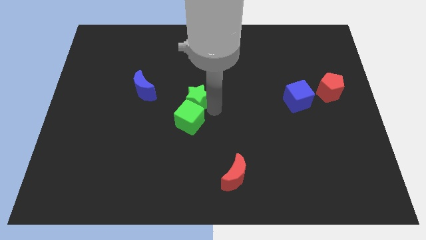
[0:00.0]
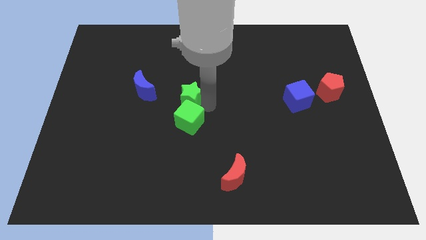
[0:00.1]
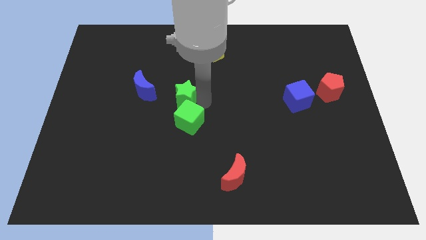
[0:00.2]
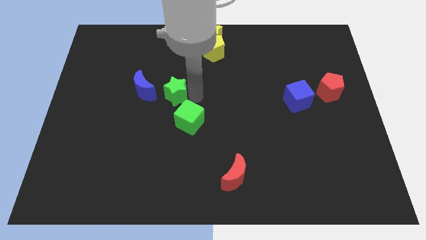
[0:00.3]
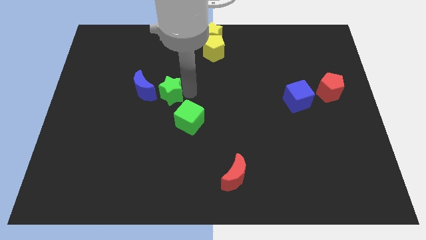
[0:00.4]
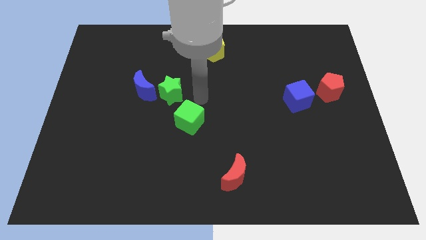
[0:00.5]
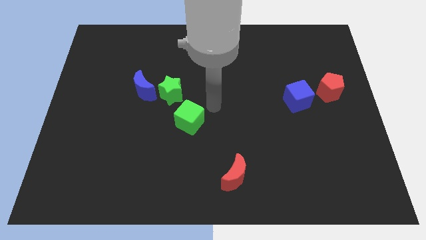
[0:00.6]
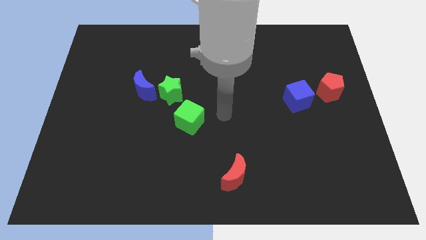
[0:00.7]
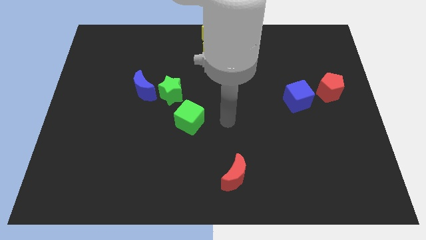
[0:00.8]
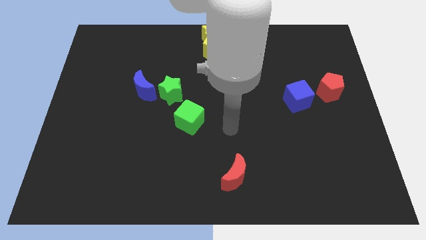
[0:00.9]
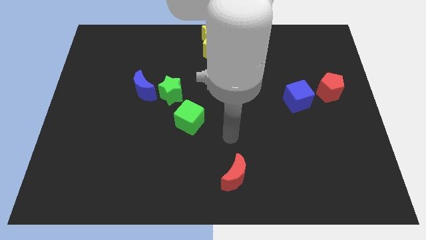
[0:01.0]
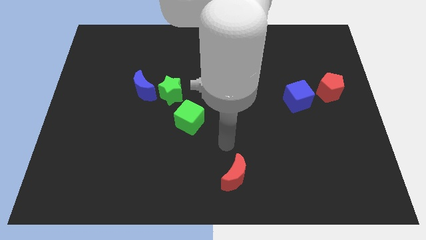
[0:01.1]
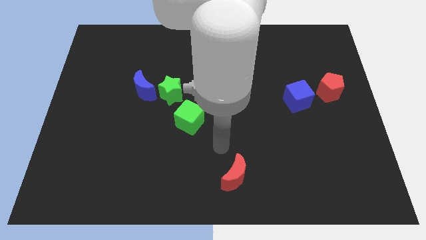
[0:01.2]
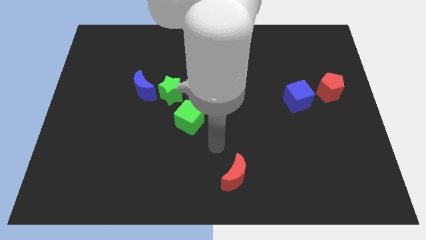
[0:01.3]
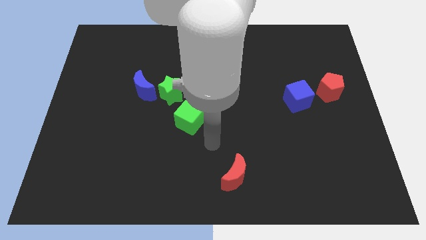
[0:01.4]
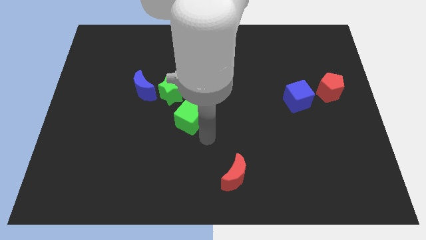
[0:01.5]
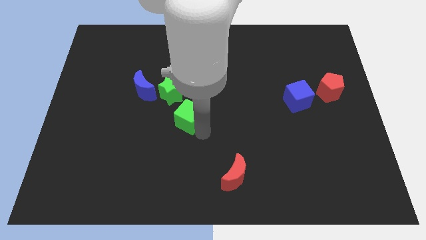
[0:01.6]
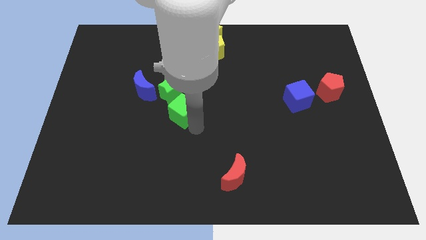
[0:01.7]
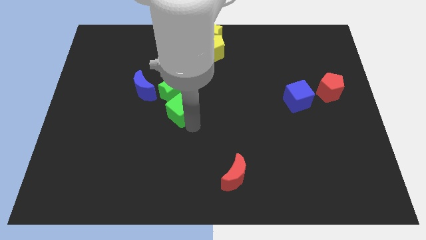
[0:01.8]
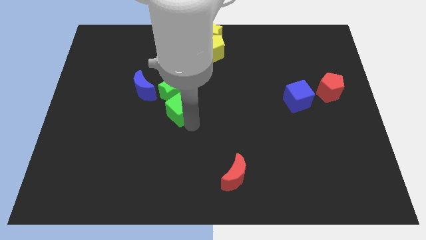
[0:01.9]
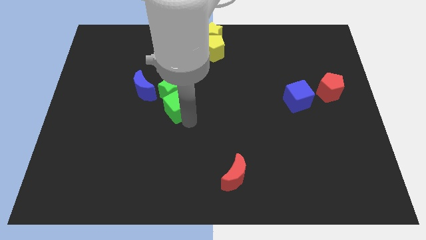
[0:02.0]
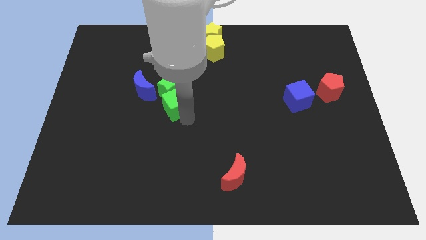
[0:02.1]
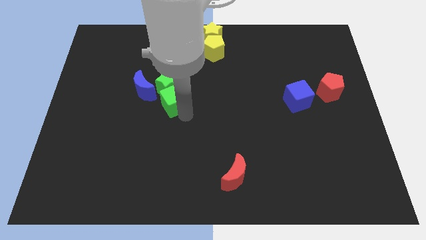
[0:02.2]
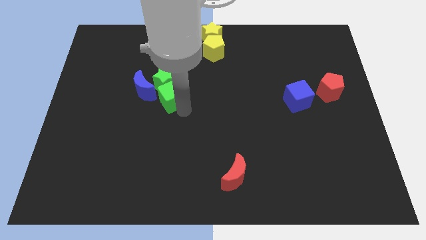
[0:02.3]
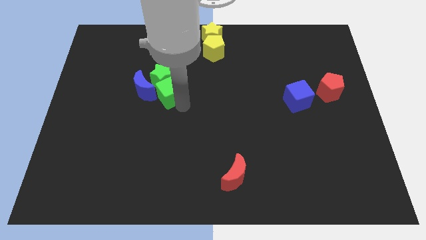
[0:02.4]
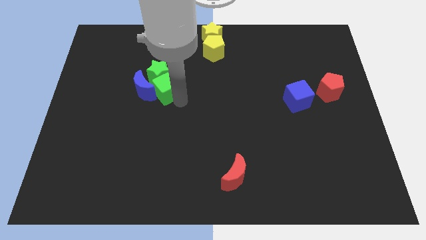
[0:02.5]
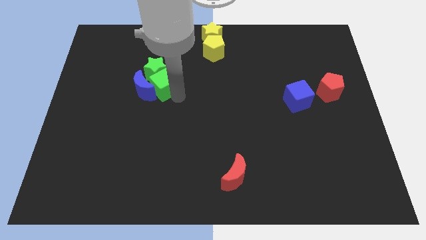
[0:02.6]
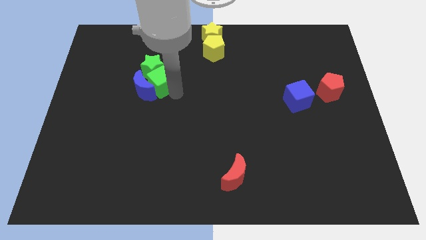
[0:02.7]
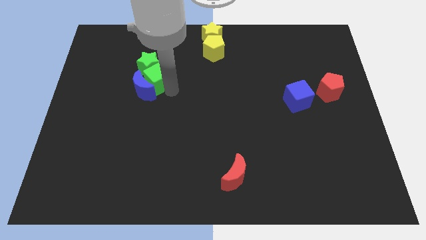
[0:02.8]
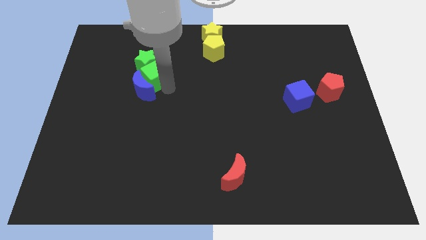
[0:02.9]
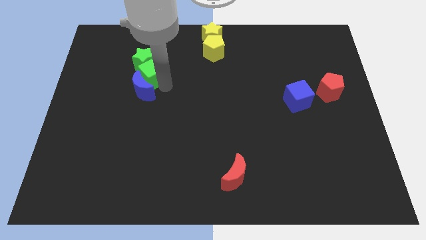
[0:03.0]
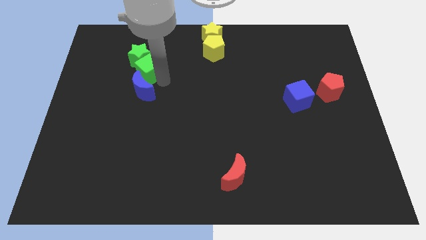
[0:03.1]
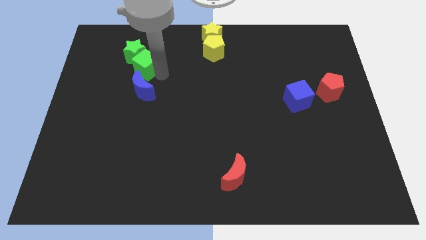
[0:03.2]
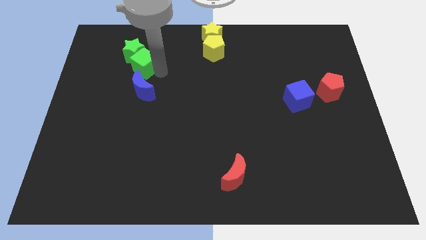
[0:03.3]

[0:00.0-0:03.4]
move the green things to the top side of the blue crescent

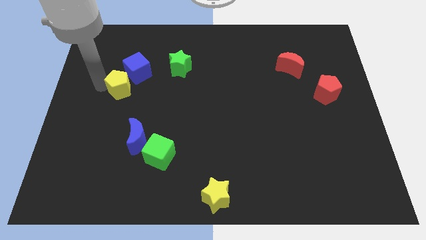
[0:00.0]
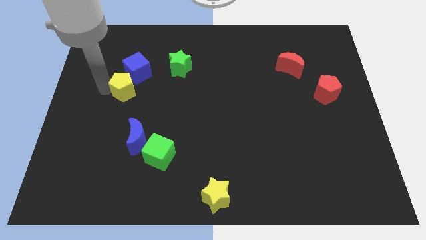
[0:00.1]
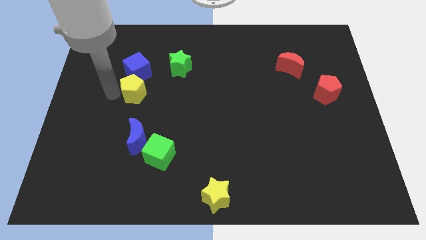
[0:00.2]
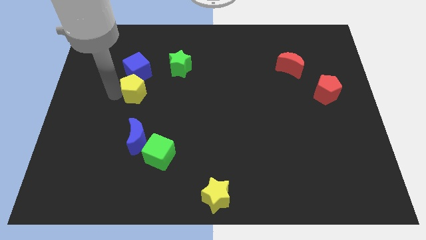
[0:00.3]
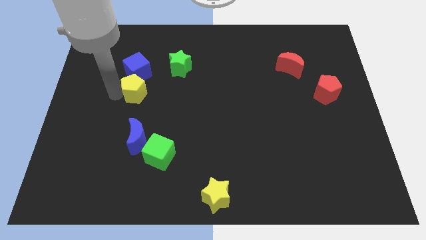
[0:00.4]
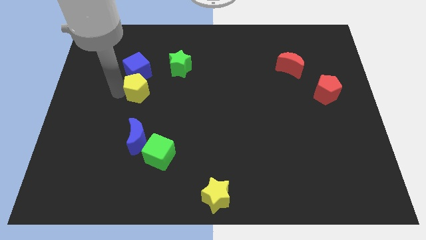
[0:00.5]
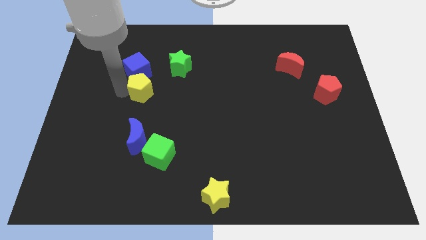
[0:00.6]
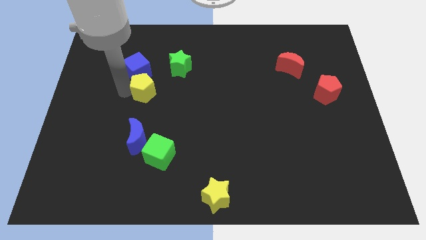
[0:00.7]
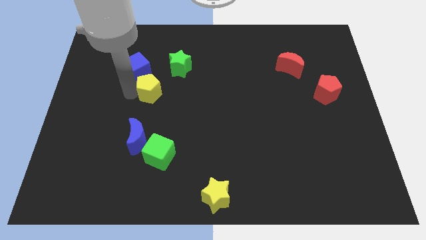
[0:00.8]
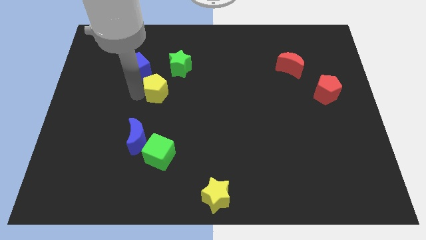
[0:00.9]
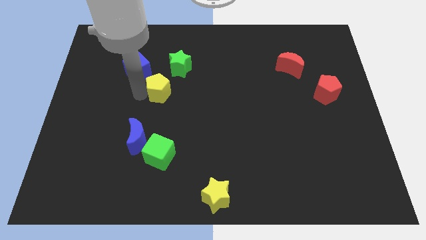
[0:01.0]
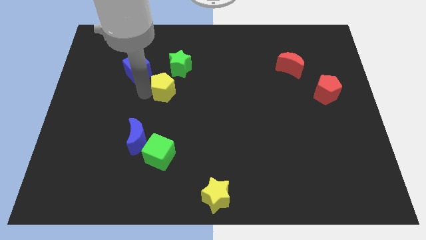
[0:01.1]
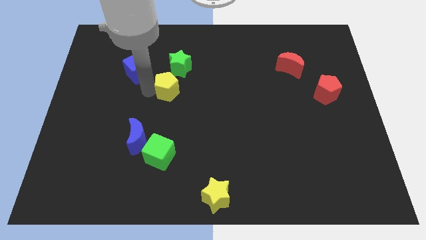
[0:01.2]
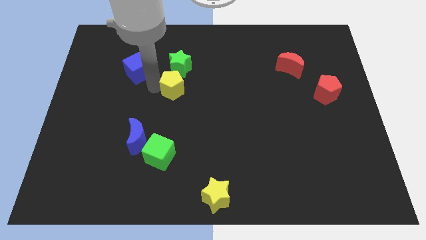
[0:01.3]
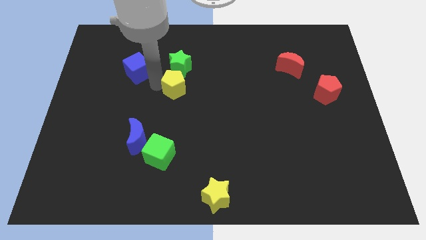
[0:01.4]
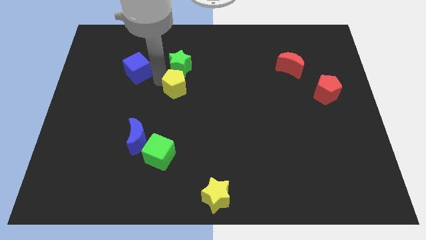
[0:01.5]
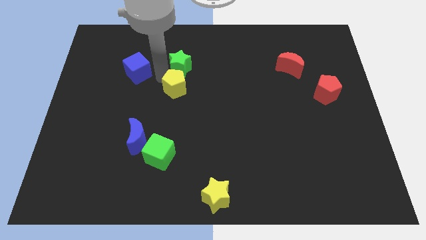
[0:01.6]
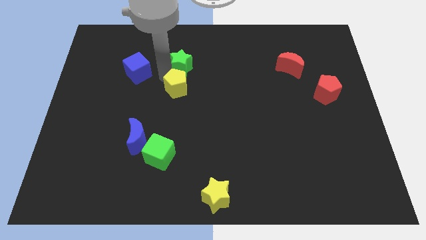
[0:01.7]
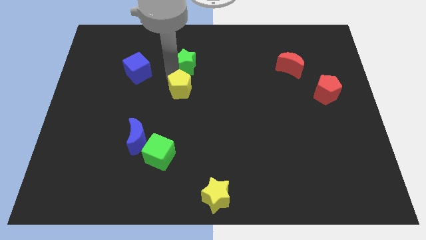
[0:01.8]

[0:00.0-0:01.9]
move the yellow pentagon below the green star

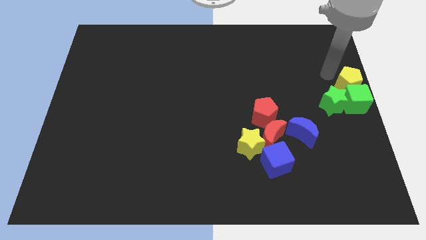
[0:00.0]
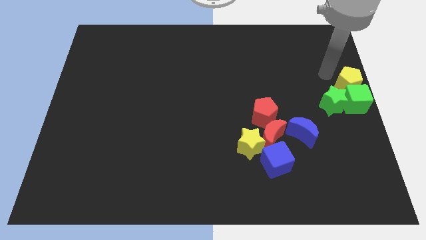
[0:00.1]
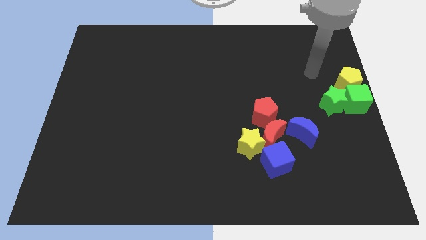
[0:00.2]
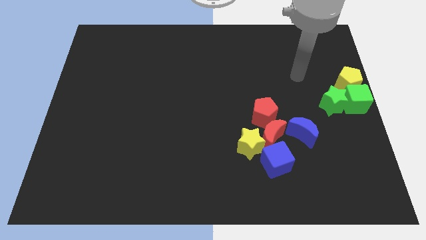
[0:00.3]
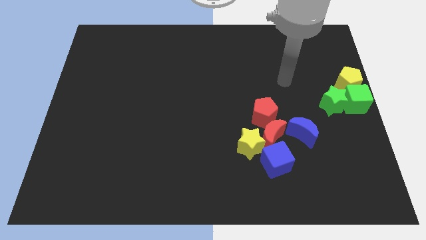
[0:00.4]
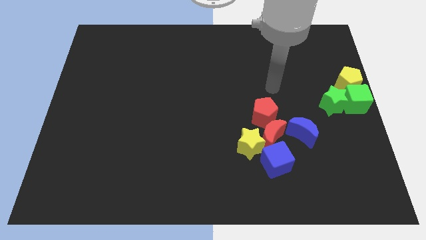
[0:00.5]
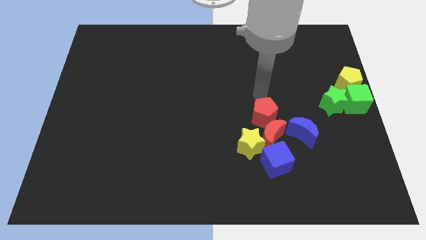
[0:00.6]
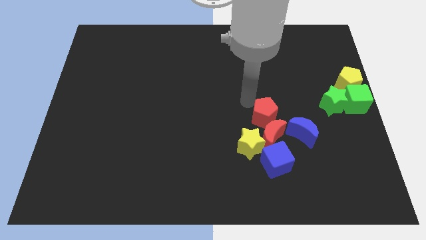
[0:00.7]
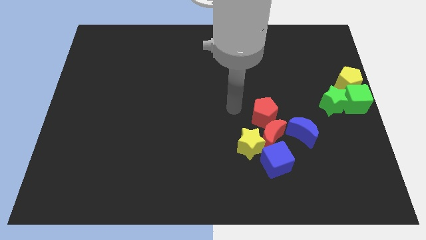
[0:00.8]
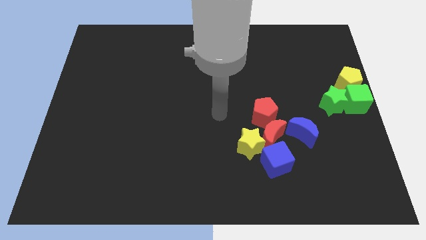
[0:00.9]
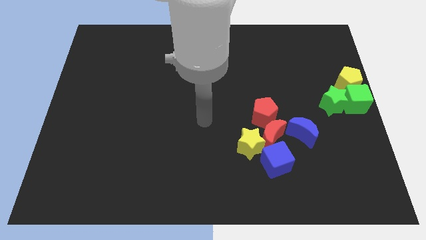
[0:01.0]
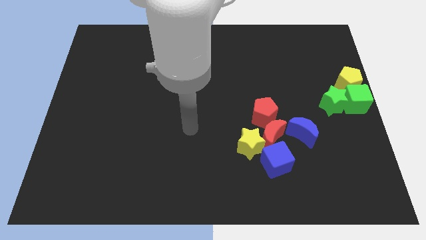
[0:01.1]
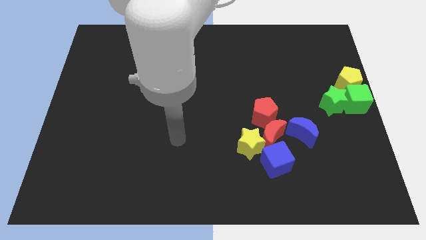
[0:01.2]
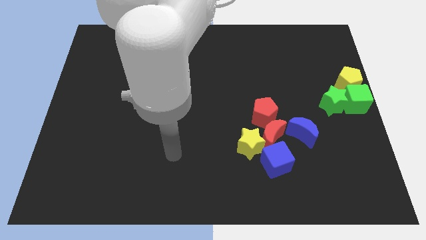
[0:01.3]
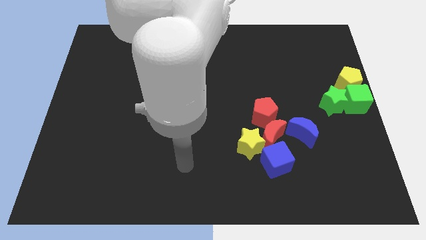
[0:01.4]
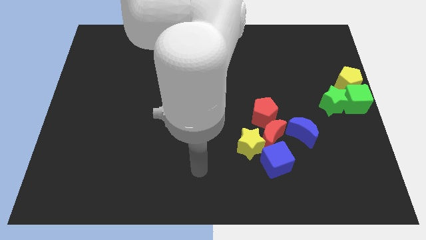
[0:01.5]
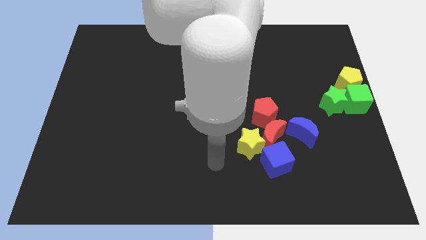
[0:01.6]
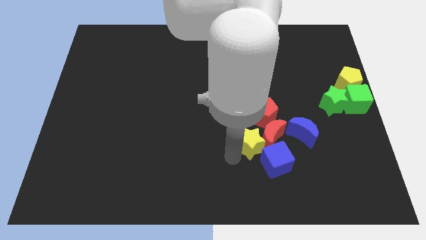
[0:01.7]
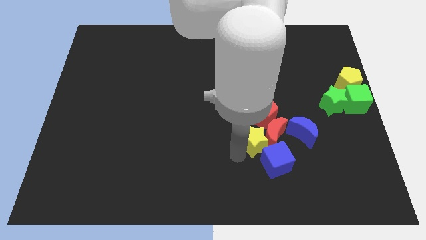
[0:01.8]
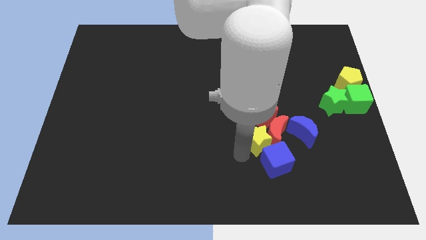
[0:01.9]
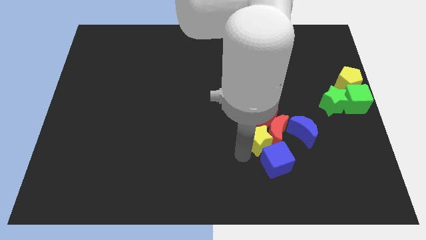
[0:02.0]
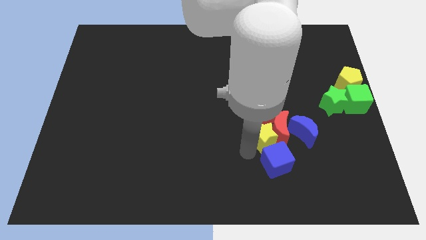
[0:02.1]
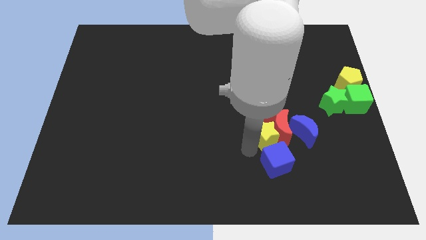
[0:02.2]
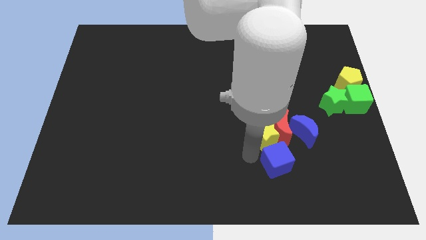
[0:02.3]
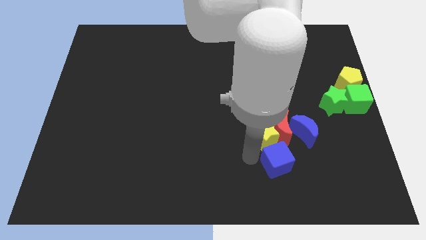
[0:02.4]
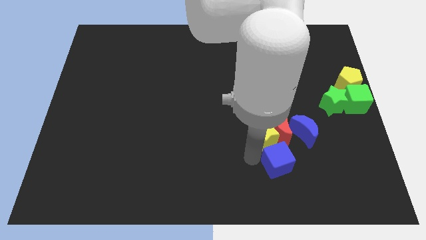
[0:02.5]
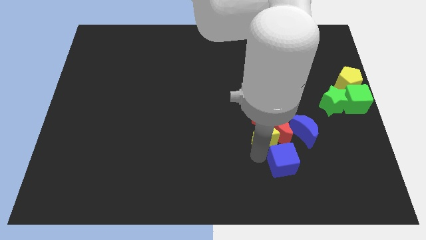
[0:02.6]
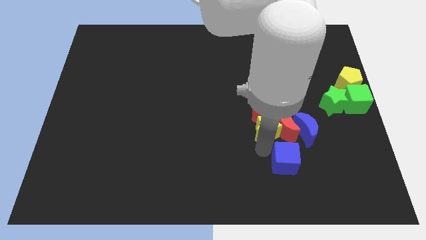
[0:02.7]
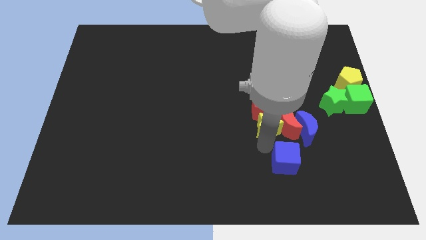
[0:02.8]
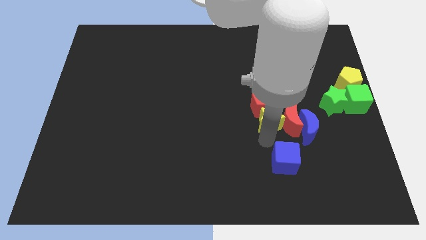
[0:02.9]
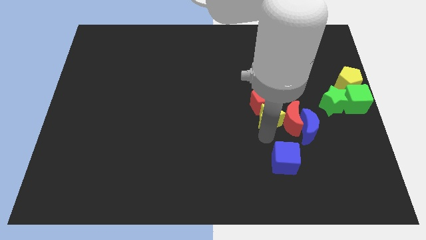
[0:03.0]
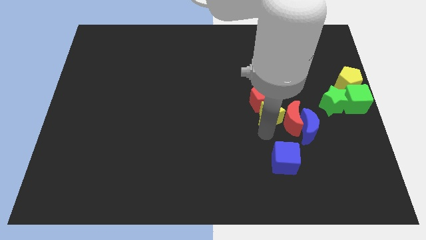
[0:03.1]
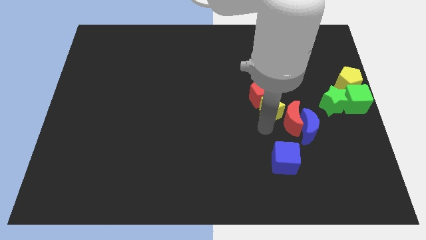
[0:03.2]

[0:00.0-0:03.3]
push the yellow star blue and red blocks towards the top side

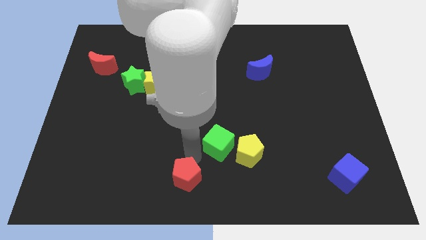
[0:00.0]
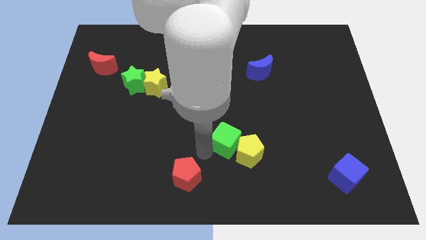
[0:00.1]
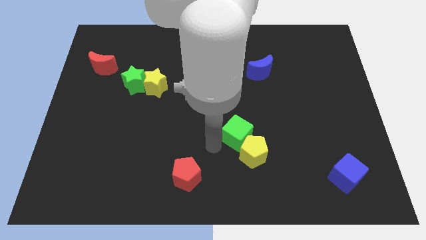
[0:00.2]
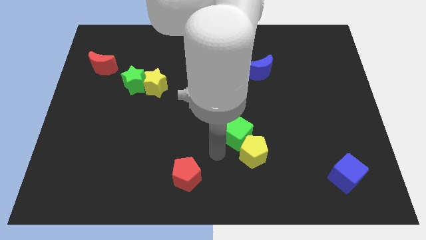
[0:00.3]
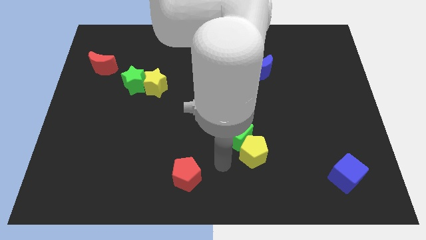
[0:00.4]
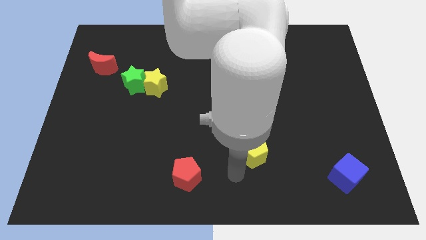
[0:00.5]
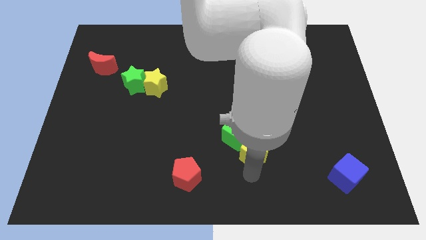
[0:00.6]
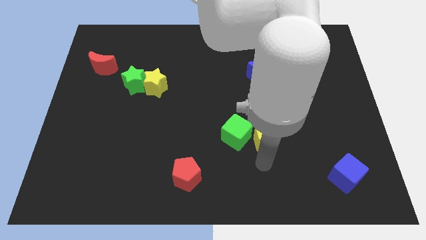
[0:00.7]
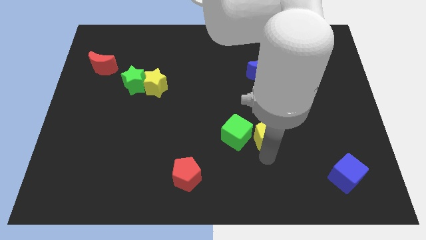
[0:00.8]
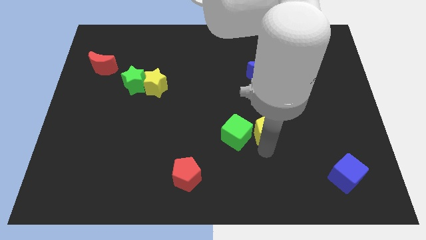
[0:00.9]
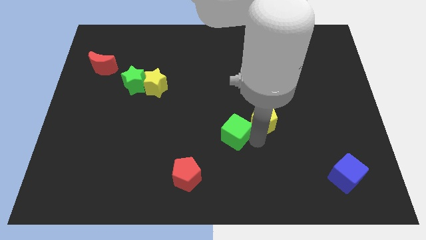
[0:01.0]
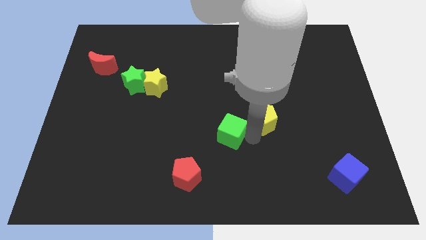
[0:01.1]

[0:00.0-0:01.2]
push the yellow pentagon and the green cube diagonal to each other
